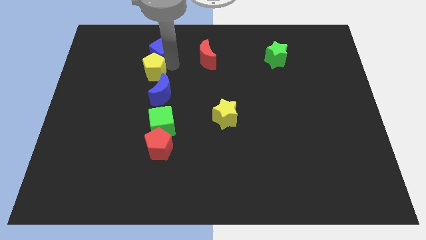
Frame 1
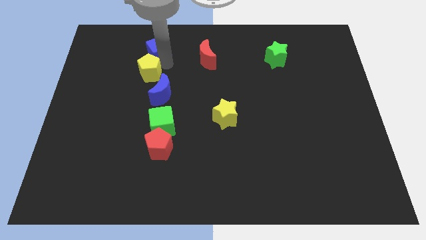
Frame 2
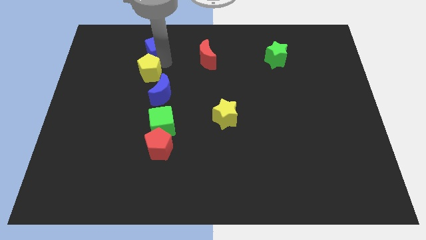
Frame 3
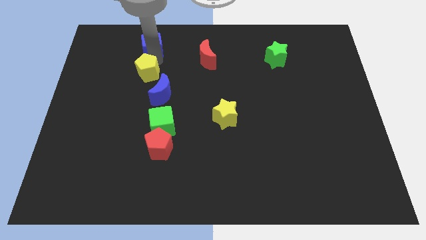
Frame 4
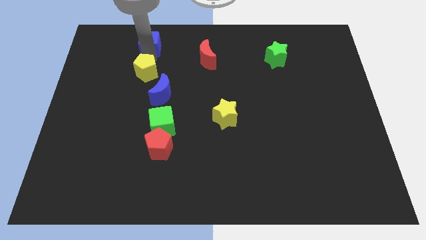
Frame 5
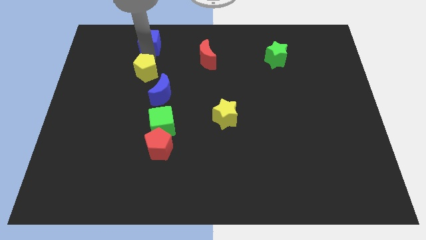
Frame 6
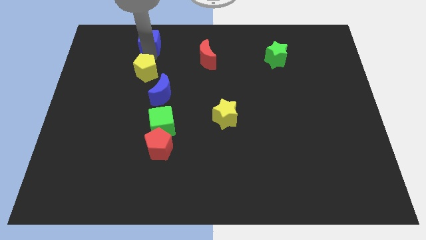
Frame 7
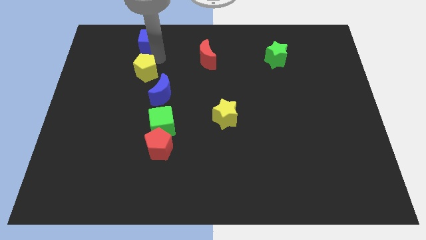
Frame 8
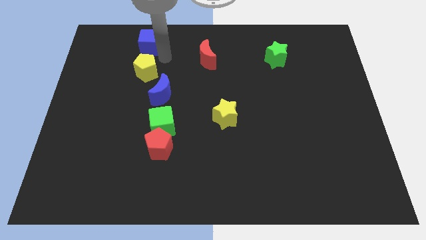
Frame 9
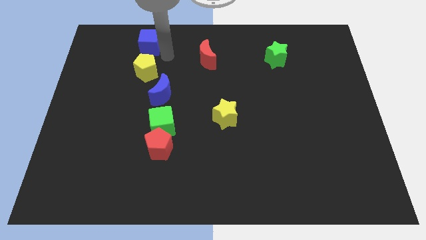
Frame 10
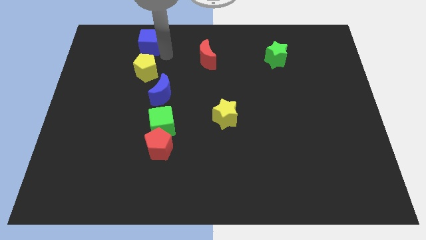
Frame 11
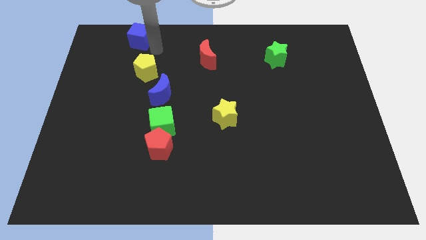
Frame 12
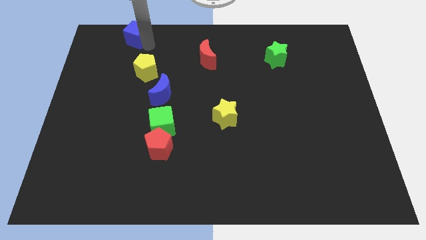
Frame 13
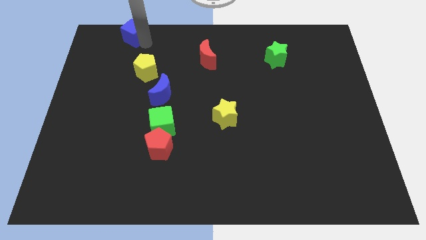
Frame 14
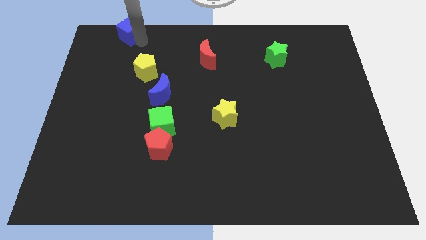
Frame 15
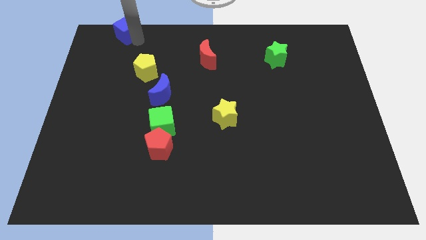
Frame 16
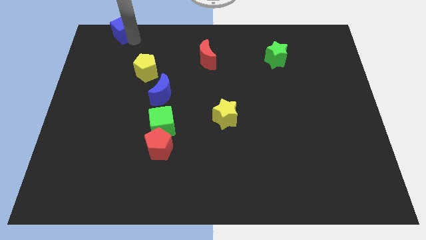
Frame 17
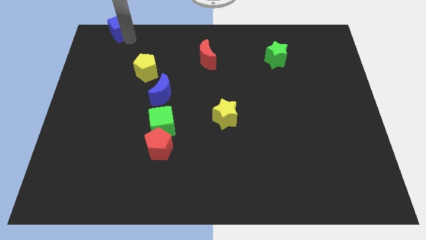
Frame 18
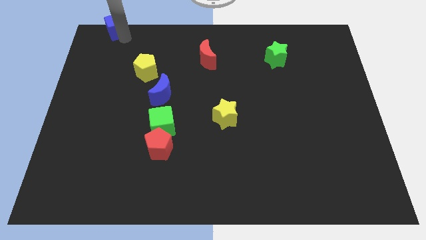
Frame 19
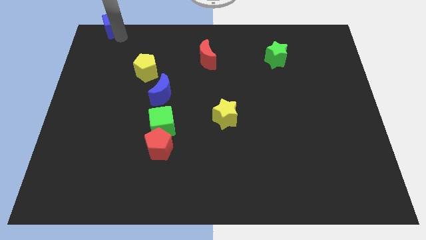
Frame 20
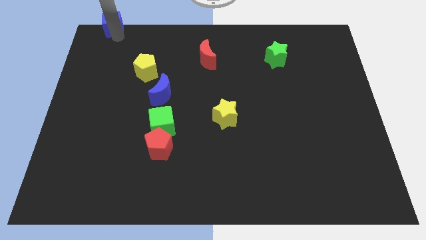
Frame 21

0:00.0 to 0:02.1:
separate blue cube from yellow pentagon

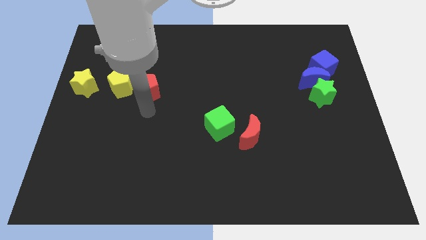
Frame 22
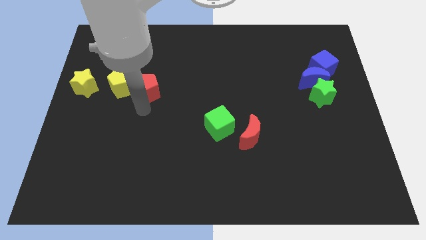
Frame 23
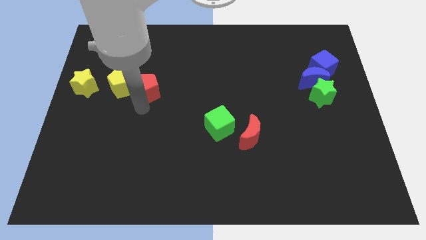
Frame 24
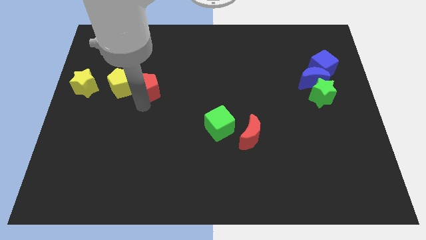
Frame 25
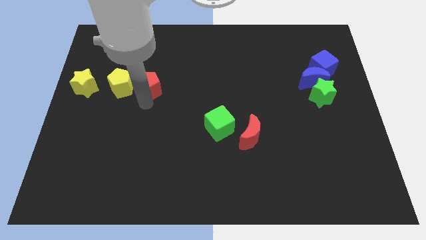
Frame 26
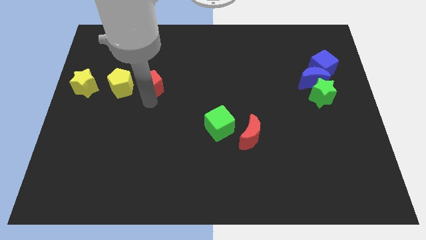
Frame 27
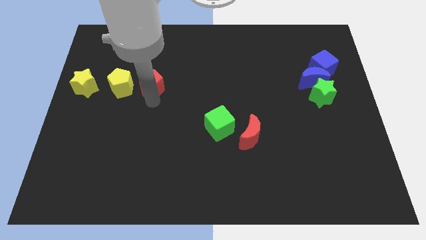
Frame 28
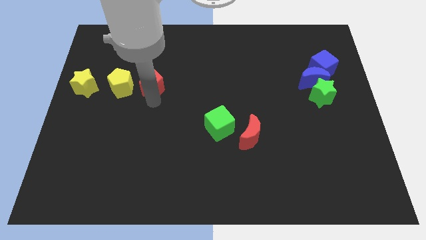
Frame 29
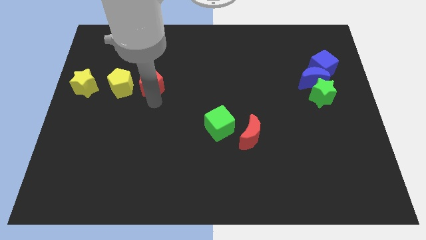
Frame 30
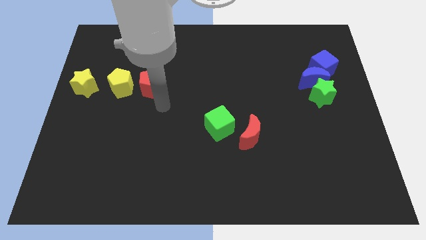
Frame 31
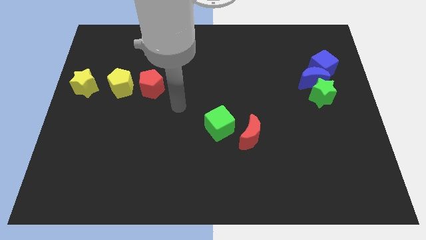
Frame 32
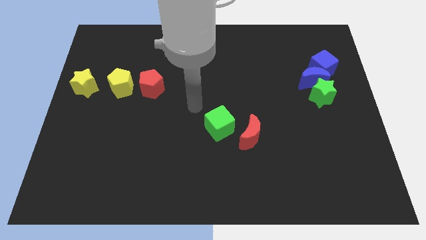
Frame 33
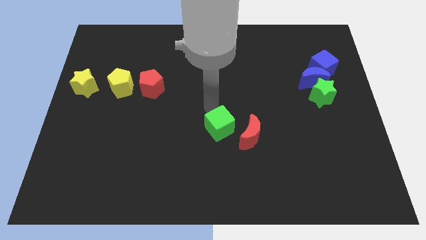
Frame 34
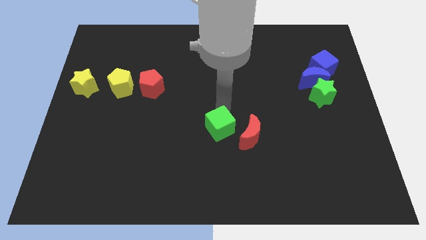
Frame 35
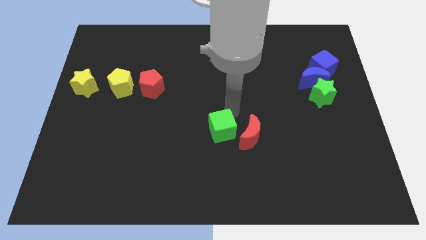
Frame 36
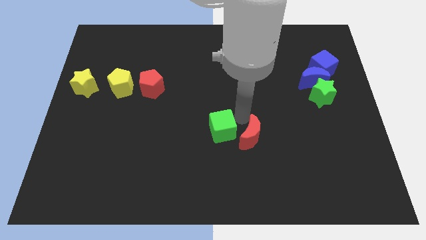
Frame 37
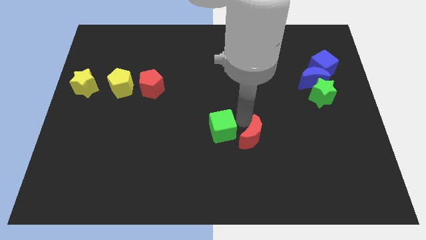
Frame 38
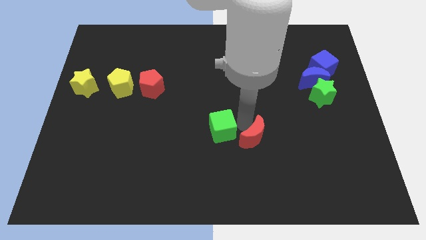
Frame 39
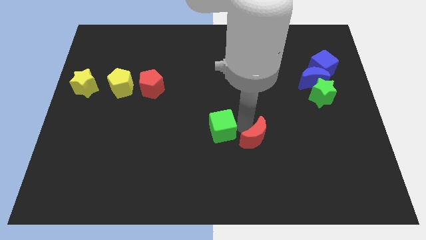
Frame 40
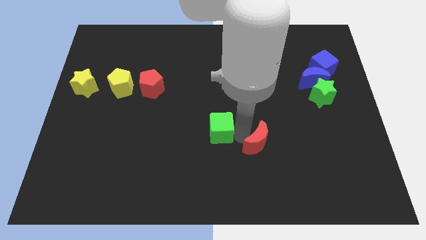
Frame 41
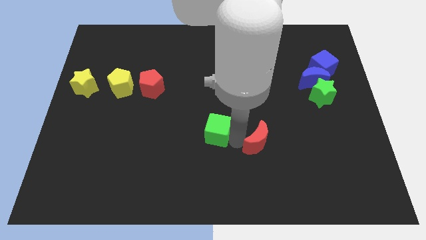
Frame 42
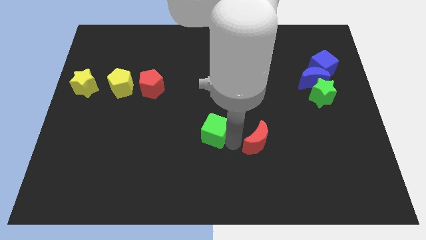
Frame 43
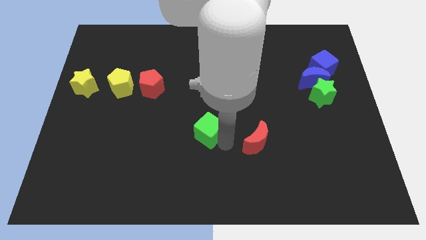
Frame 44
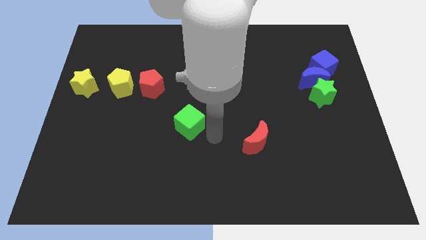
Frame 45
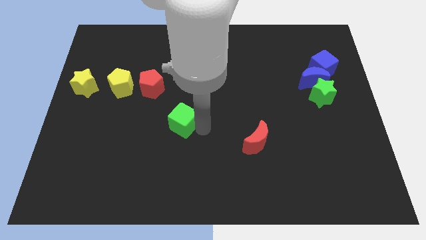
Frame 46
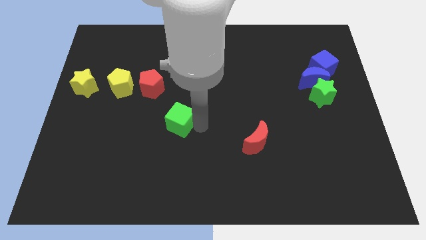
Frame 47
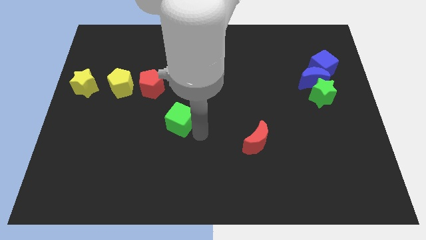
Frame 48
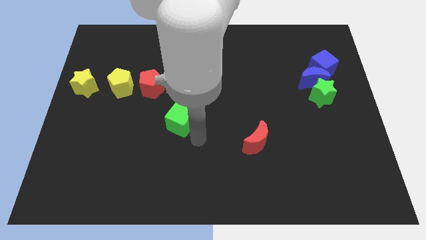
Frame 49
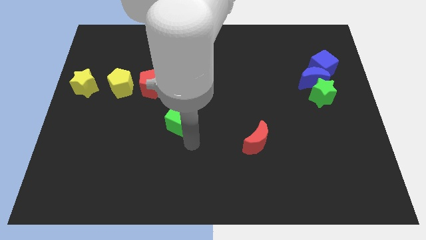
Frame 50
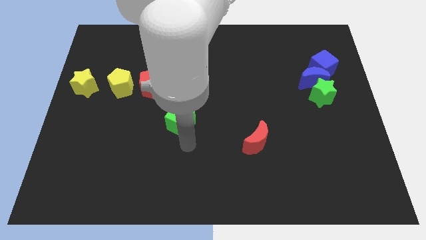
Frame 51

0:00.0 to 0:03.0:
push green star towards green cube

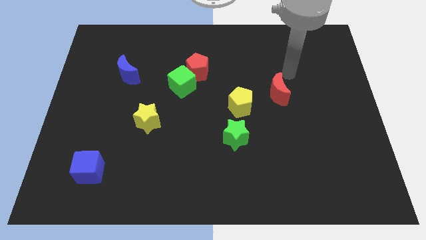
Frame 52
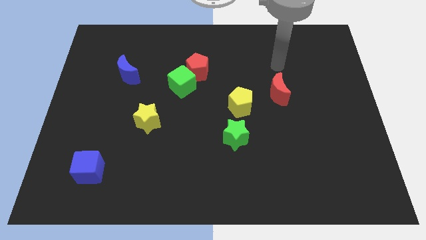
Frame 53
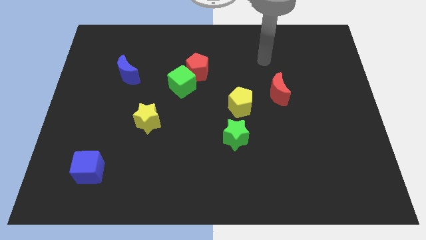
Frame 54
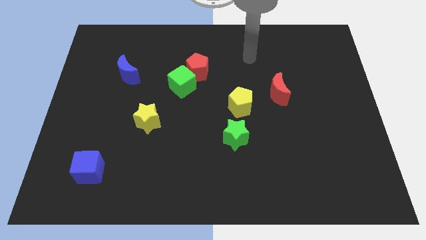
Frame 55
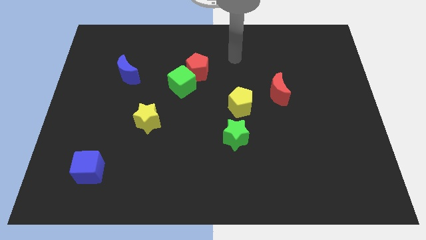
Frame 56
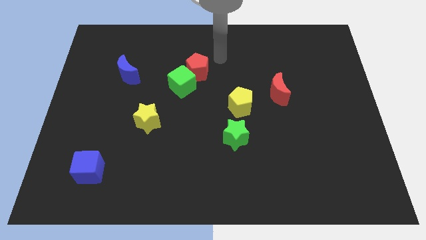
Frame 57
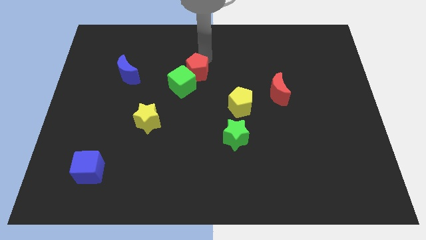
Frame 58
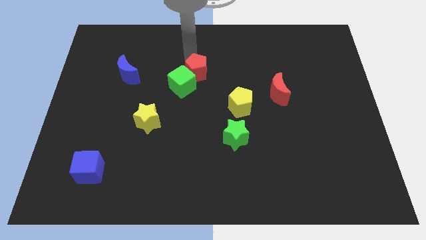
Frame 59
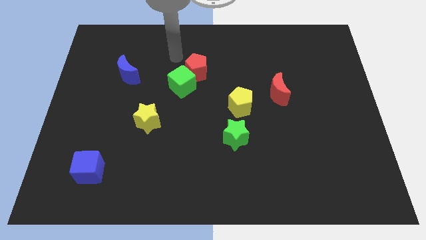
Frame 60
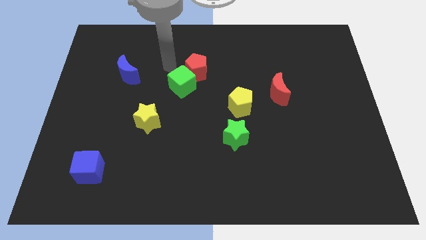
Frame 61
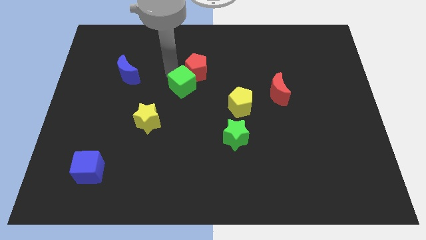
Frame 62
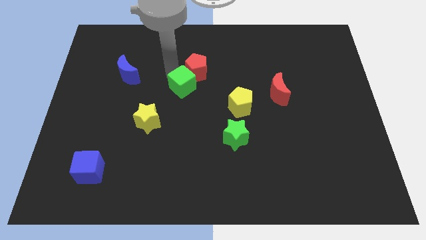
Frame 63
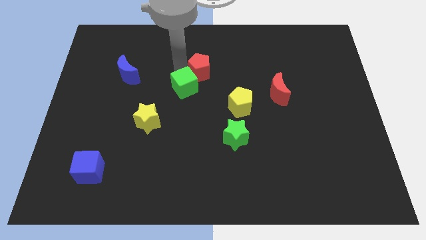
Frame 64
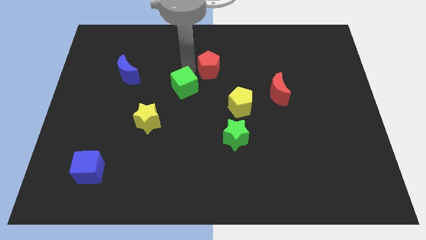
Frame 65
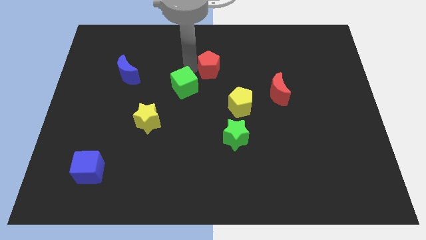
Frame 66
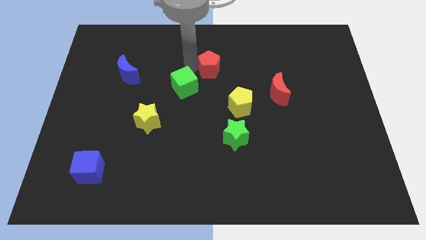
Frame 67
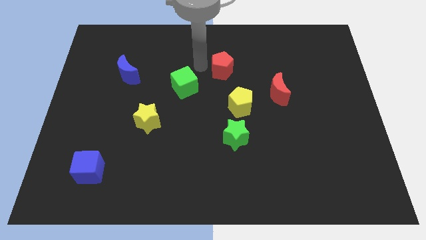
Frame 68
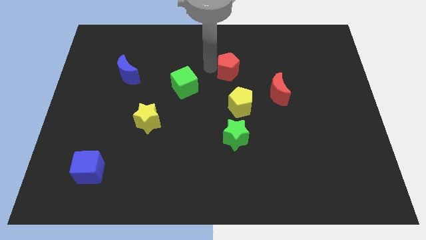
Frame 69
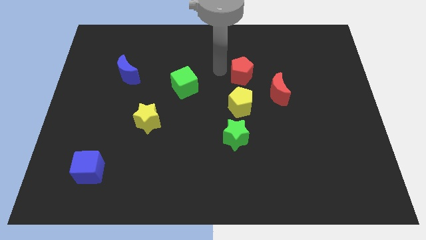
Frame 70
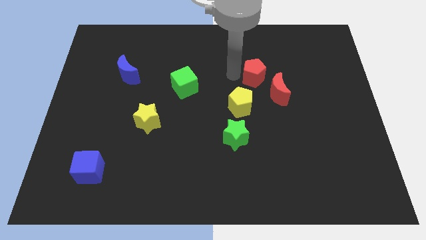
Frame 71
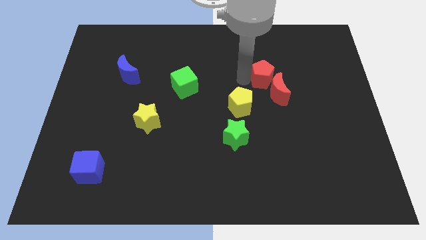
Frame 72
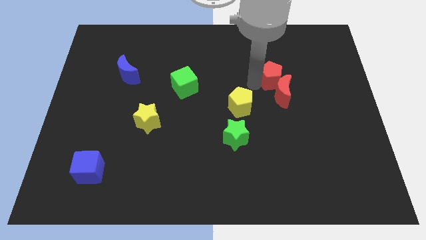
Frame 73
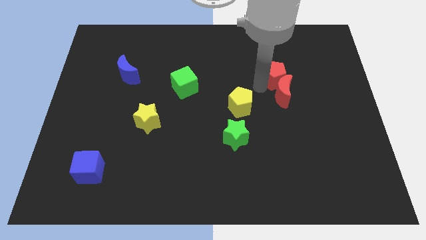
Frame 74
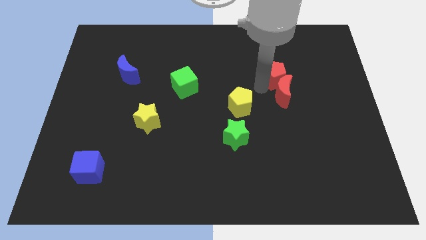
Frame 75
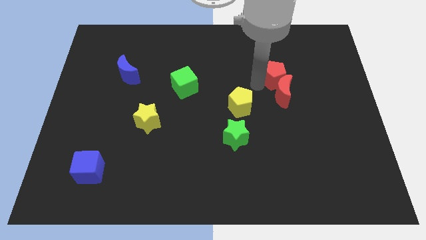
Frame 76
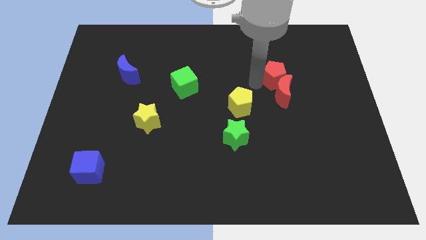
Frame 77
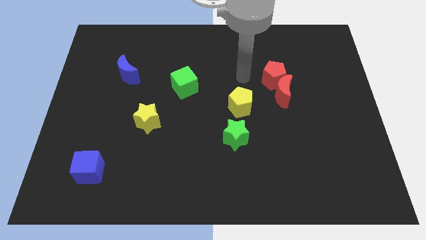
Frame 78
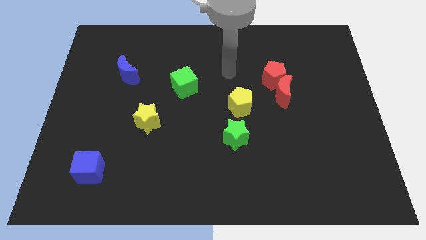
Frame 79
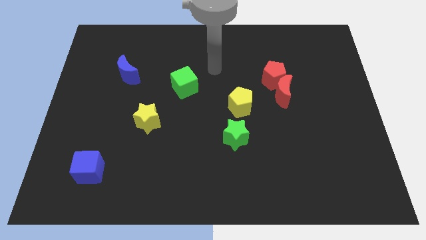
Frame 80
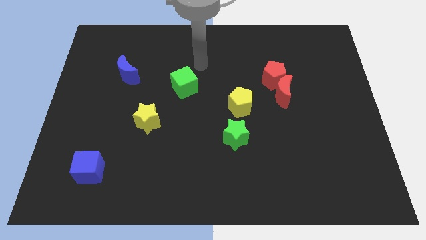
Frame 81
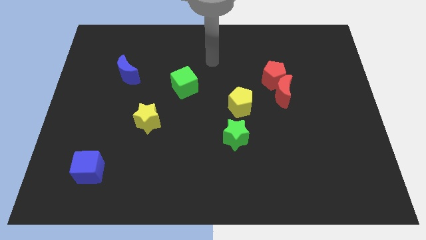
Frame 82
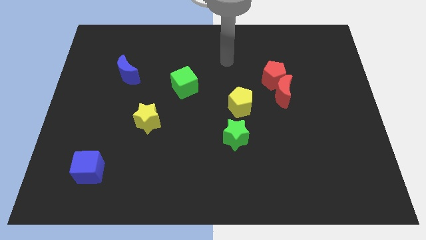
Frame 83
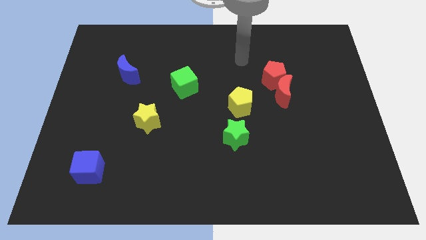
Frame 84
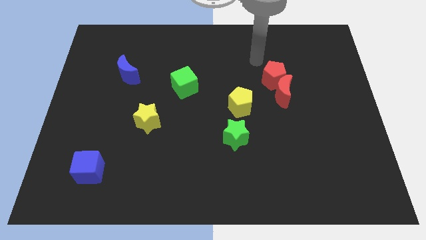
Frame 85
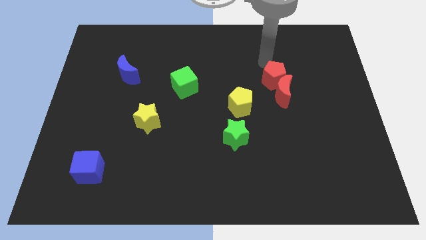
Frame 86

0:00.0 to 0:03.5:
move the red pentagon on top of the red crescent

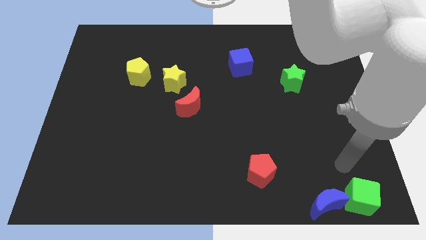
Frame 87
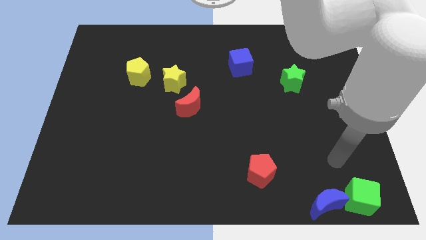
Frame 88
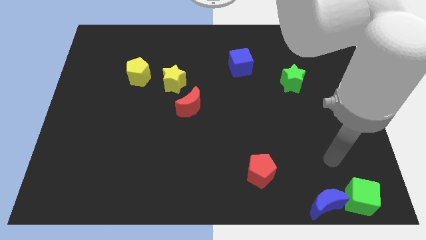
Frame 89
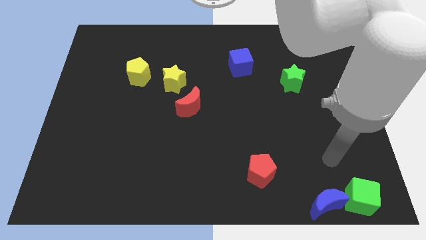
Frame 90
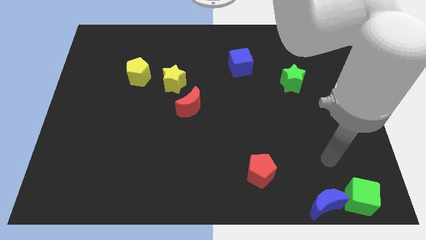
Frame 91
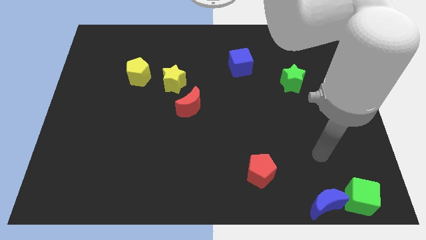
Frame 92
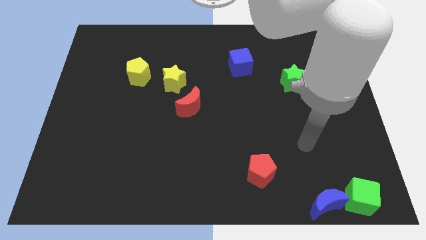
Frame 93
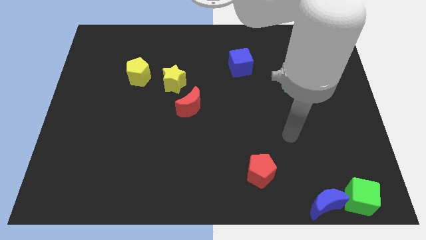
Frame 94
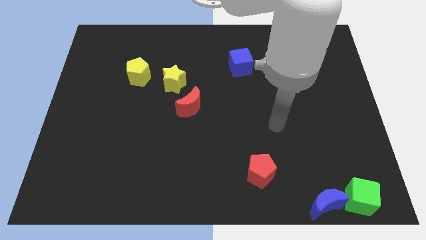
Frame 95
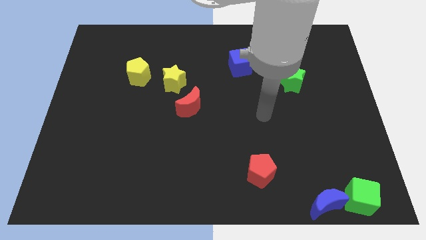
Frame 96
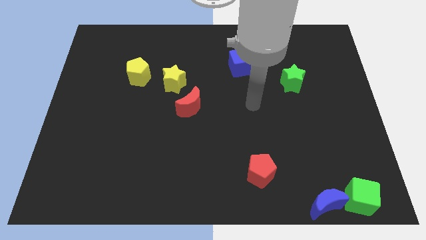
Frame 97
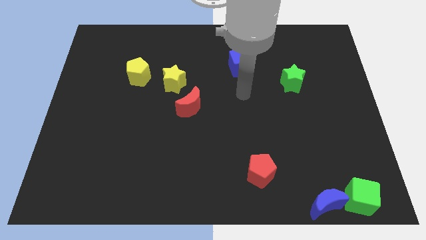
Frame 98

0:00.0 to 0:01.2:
point the arm at the bottom of the blue cube
